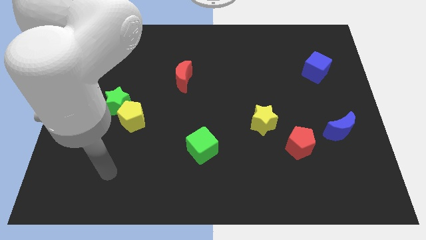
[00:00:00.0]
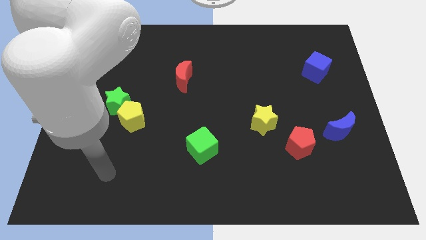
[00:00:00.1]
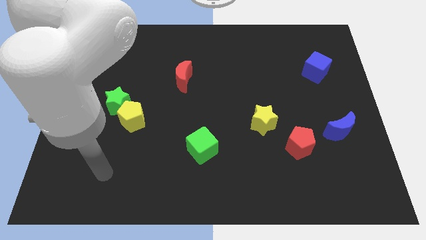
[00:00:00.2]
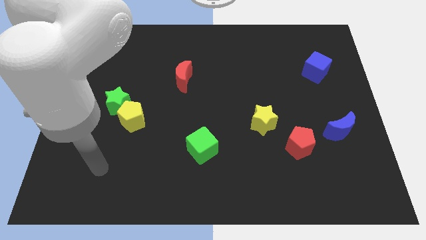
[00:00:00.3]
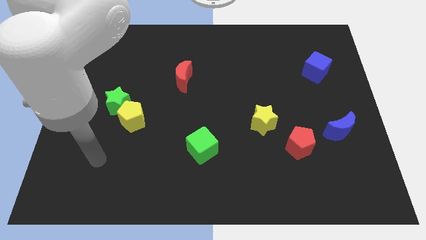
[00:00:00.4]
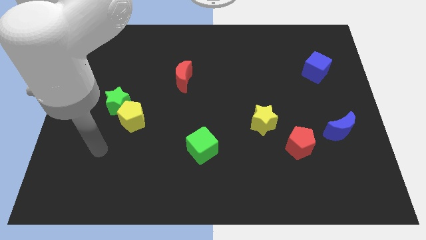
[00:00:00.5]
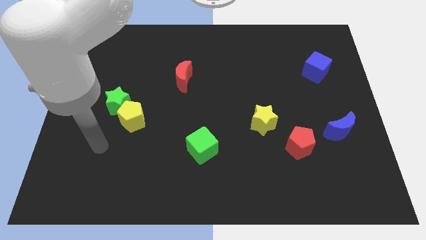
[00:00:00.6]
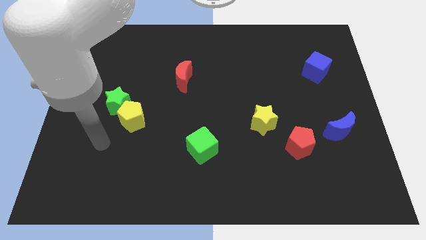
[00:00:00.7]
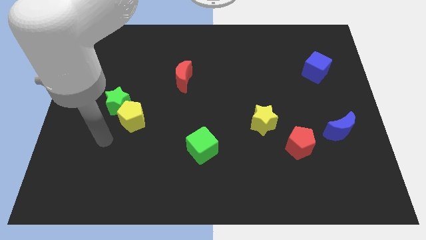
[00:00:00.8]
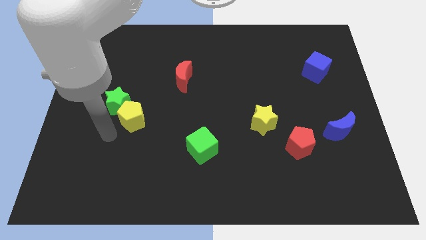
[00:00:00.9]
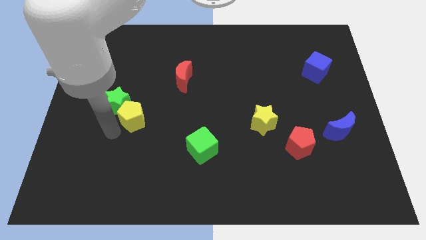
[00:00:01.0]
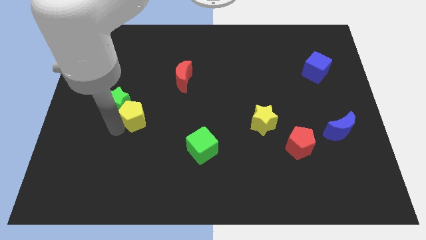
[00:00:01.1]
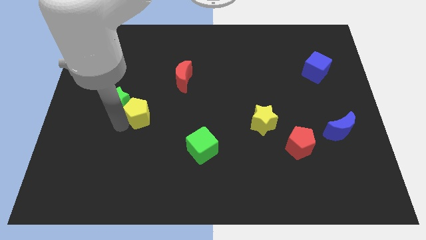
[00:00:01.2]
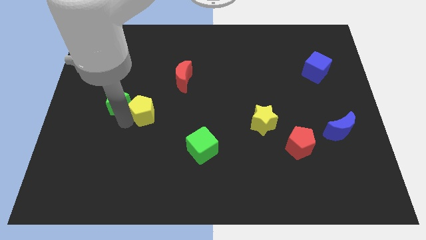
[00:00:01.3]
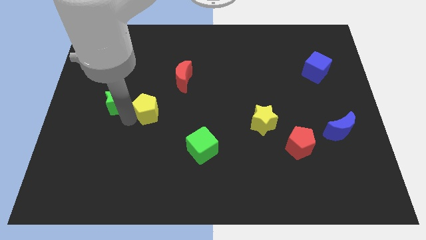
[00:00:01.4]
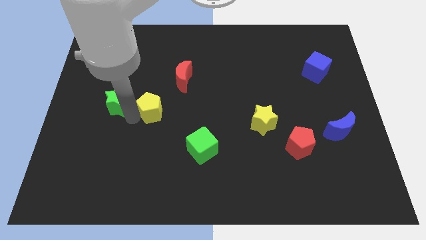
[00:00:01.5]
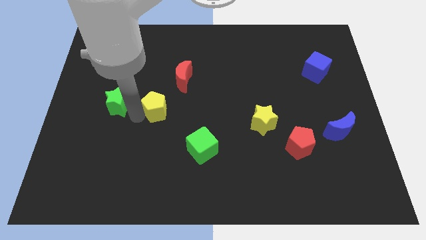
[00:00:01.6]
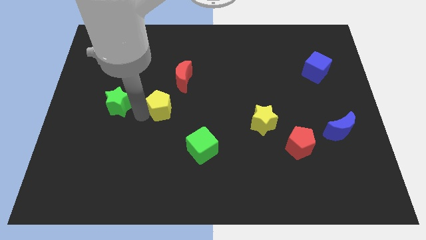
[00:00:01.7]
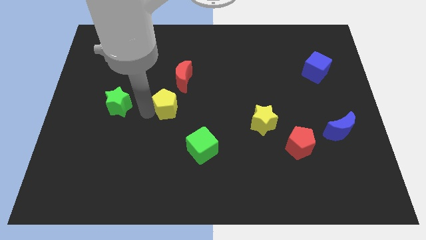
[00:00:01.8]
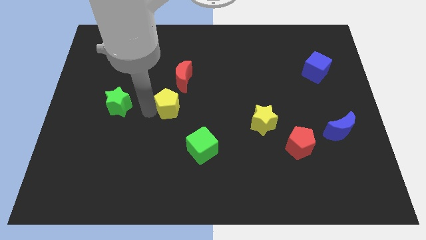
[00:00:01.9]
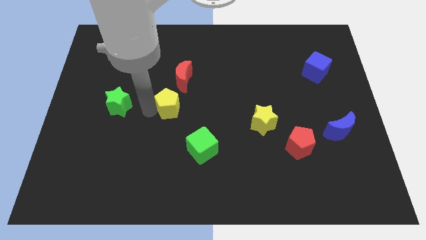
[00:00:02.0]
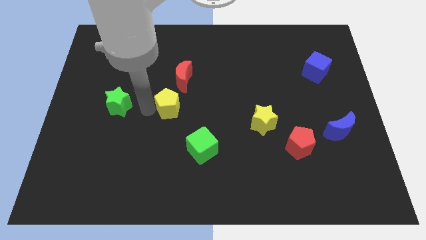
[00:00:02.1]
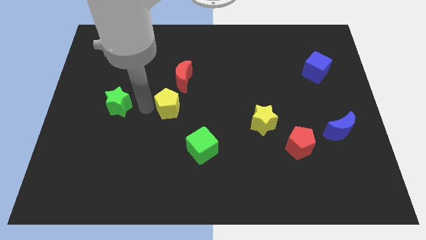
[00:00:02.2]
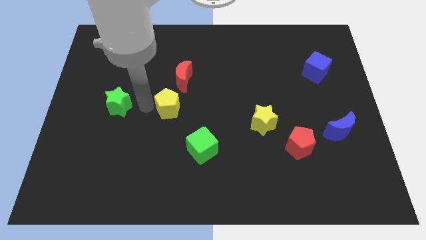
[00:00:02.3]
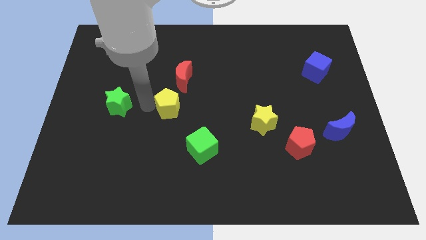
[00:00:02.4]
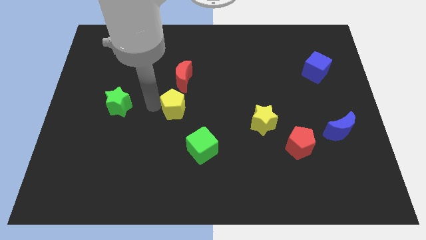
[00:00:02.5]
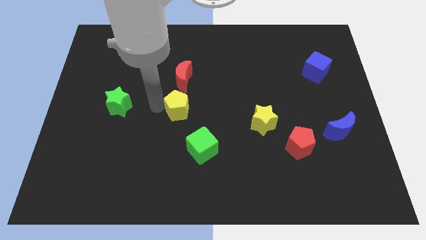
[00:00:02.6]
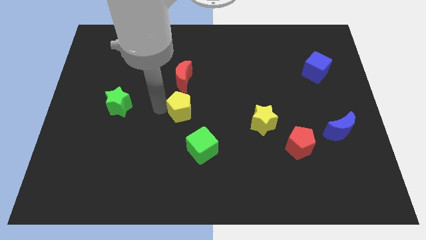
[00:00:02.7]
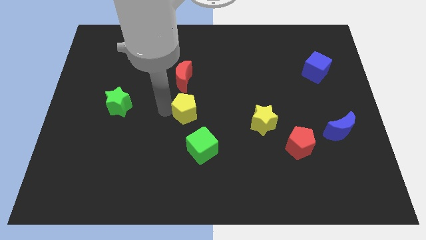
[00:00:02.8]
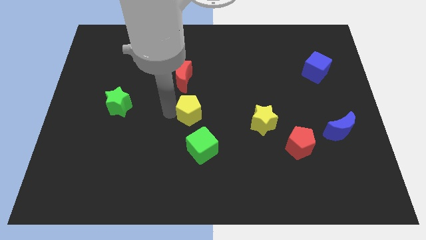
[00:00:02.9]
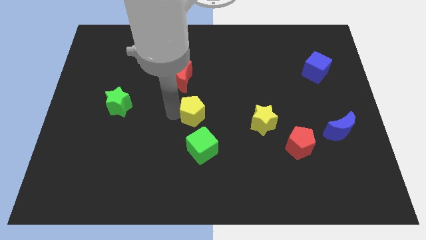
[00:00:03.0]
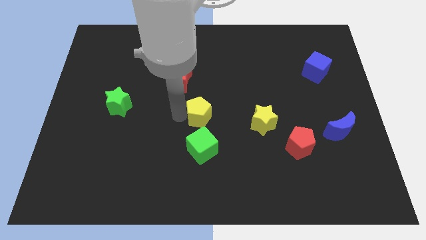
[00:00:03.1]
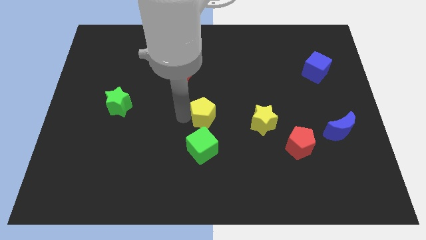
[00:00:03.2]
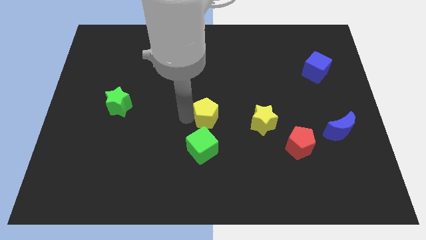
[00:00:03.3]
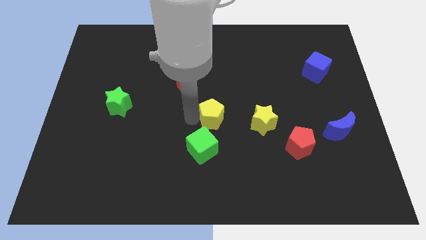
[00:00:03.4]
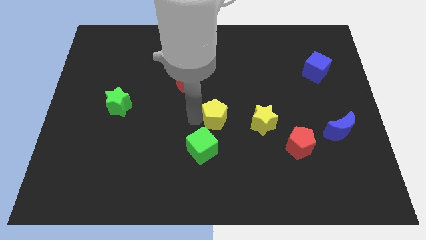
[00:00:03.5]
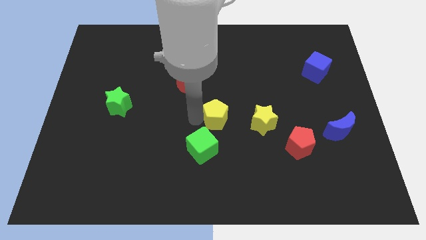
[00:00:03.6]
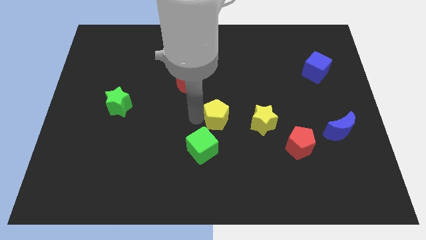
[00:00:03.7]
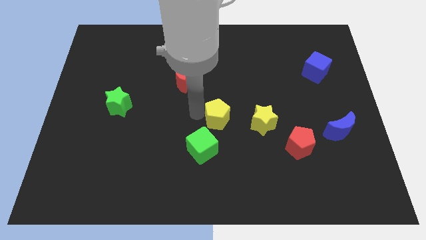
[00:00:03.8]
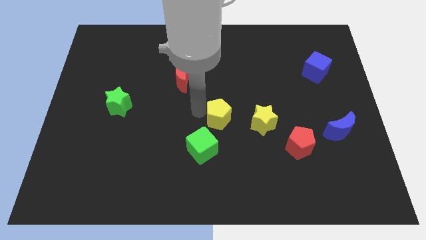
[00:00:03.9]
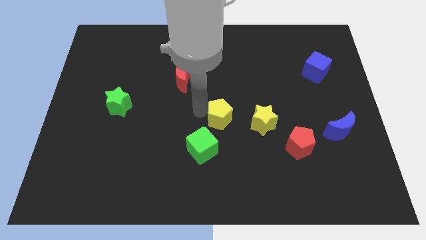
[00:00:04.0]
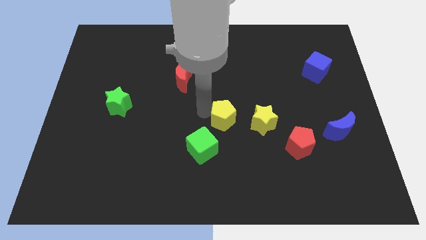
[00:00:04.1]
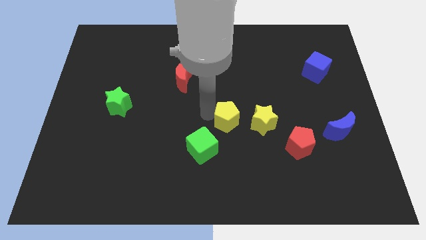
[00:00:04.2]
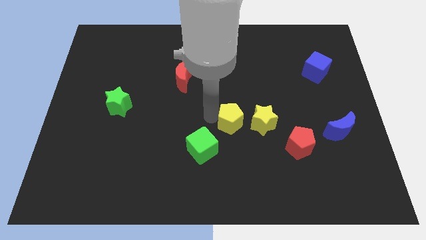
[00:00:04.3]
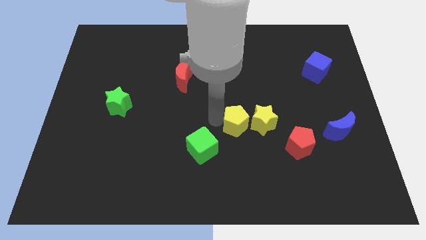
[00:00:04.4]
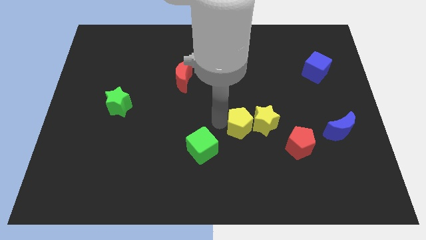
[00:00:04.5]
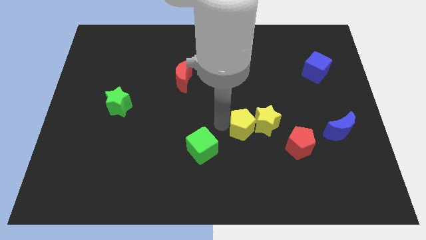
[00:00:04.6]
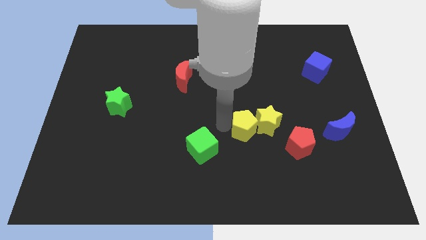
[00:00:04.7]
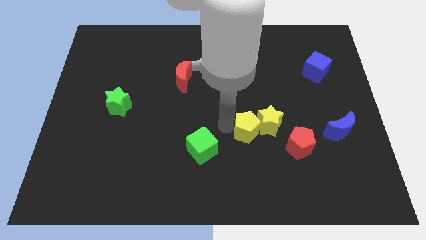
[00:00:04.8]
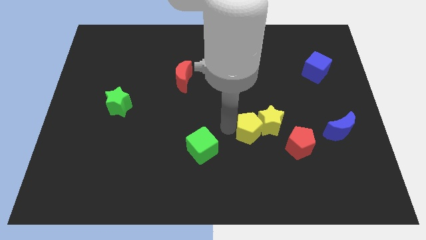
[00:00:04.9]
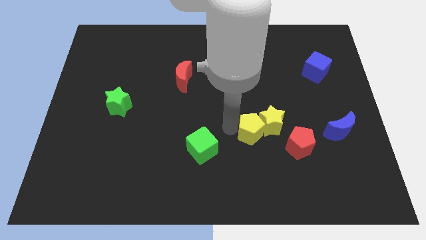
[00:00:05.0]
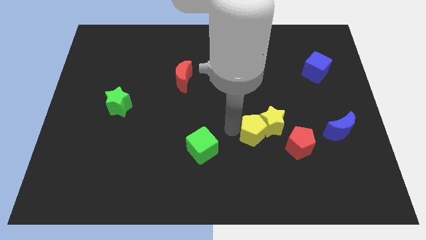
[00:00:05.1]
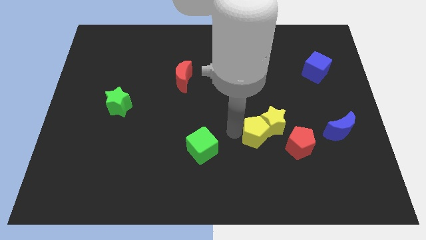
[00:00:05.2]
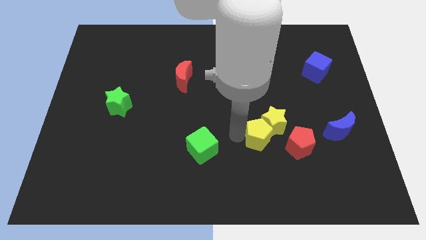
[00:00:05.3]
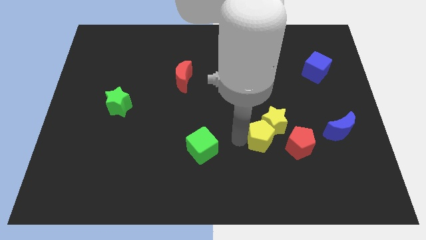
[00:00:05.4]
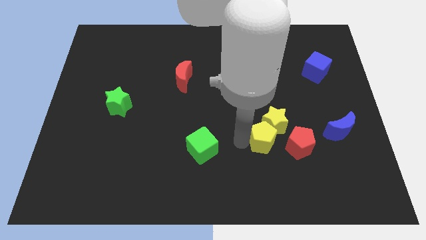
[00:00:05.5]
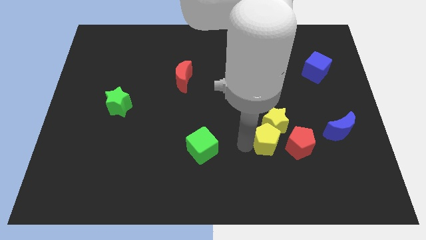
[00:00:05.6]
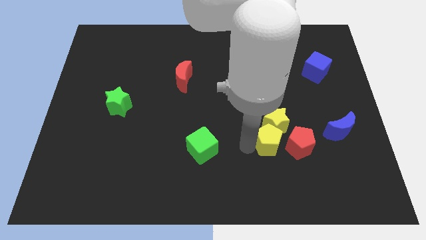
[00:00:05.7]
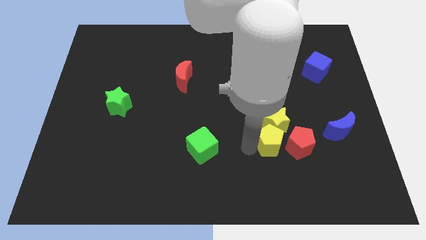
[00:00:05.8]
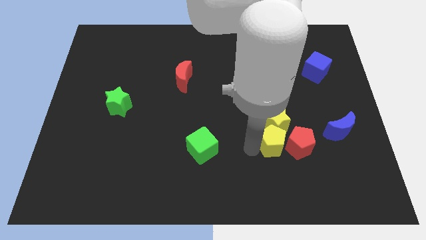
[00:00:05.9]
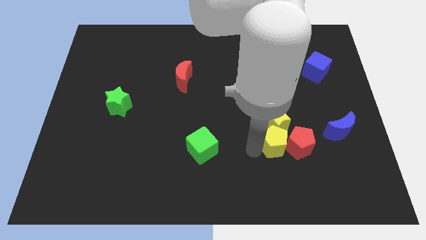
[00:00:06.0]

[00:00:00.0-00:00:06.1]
put the yellow pentagon towards the red pentagon

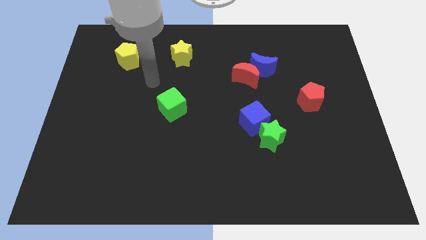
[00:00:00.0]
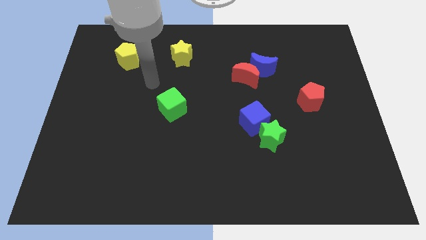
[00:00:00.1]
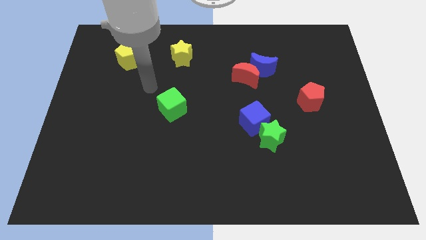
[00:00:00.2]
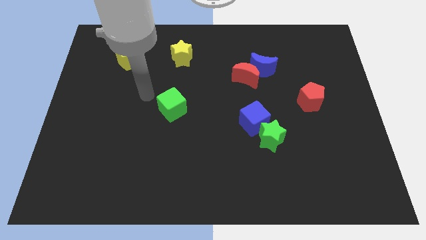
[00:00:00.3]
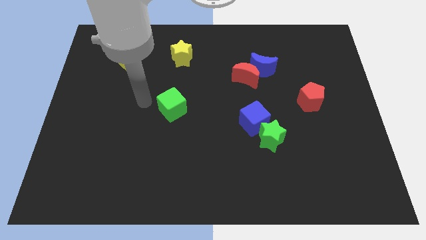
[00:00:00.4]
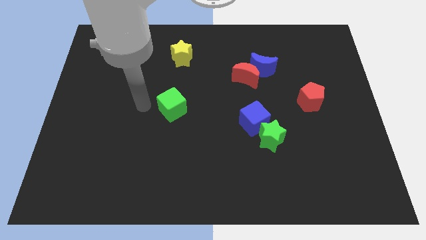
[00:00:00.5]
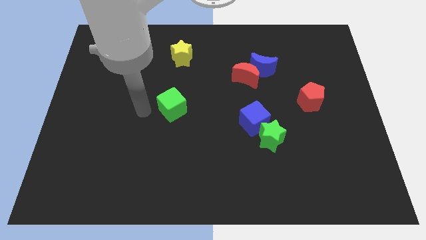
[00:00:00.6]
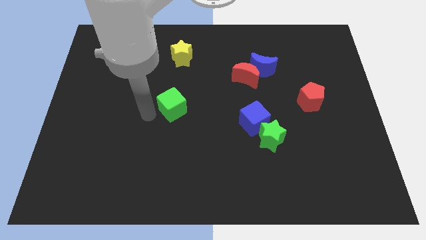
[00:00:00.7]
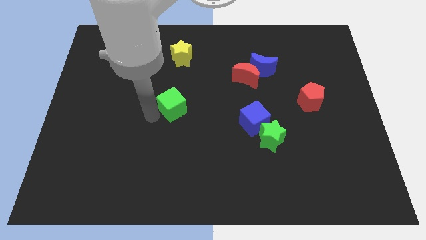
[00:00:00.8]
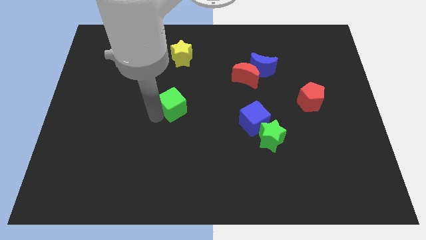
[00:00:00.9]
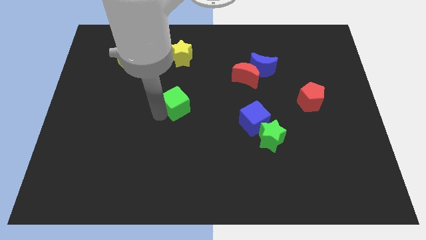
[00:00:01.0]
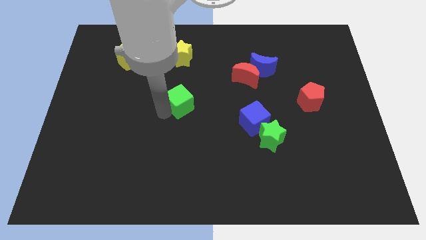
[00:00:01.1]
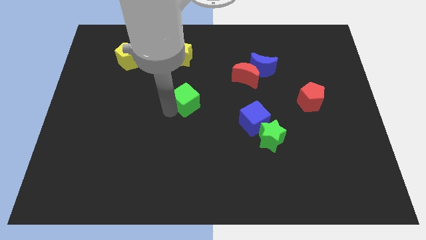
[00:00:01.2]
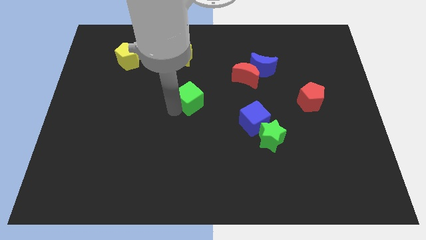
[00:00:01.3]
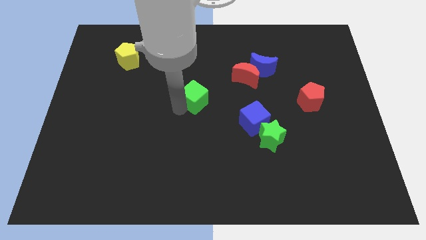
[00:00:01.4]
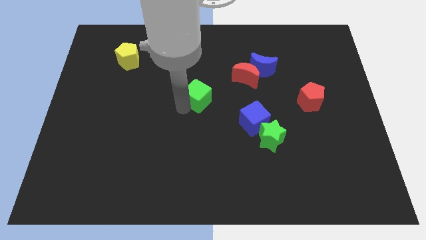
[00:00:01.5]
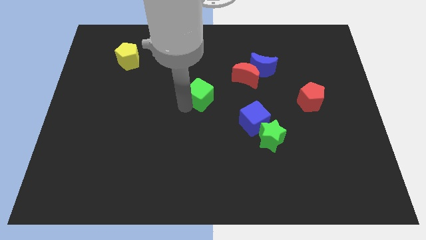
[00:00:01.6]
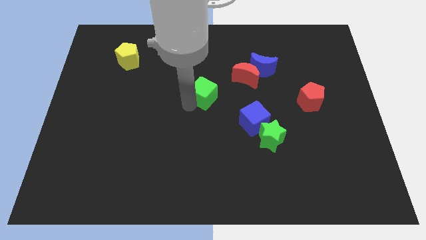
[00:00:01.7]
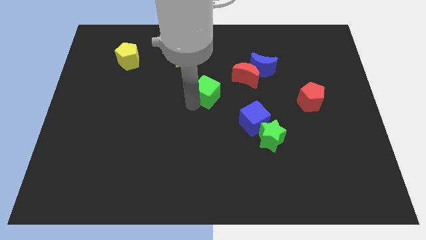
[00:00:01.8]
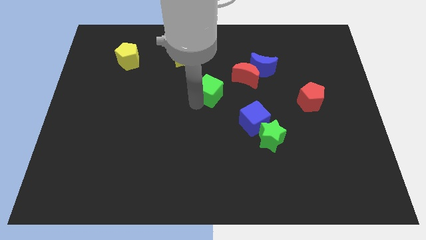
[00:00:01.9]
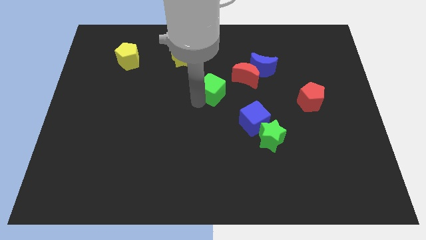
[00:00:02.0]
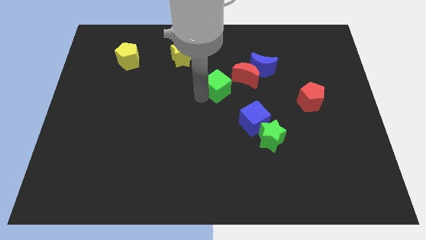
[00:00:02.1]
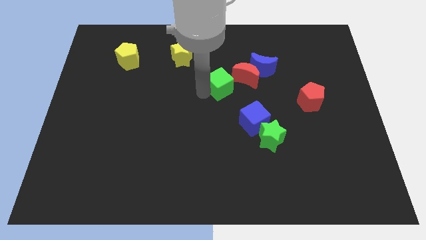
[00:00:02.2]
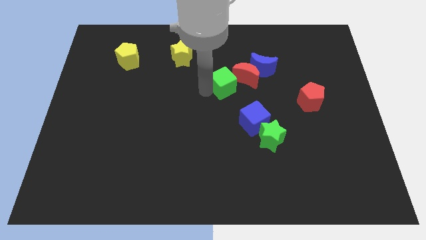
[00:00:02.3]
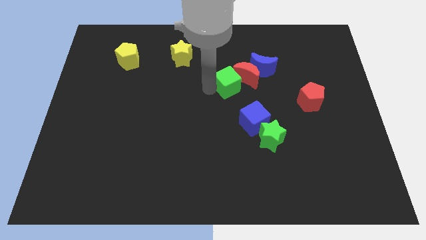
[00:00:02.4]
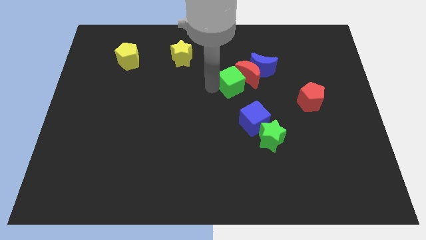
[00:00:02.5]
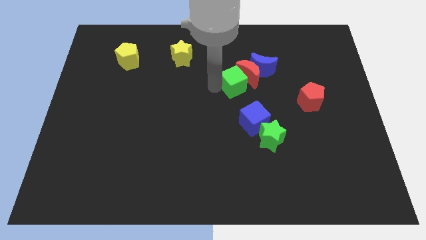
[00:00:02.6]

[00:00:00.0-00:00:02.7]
push the green cube towards the red moon
